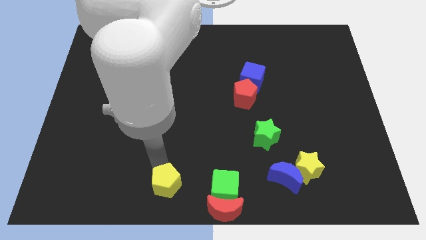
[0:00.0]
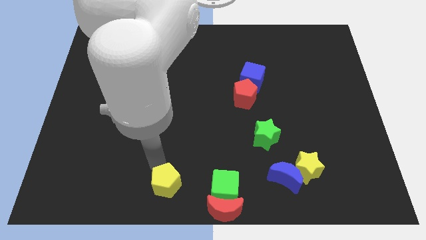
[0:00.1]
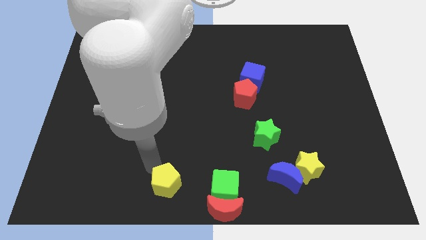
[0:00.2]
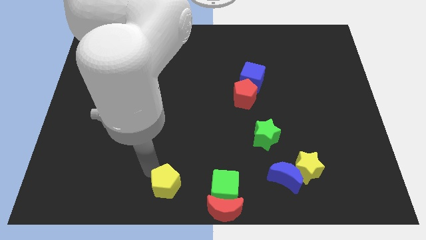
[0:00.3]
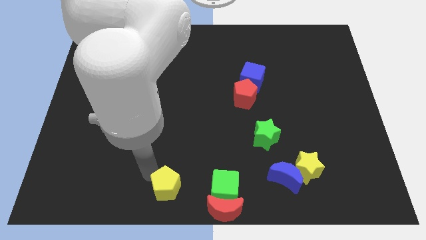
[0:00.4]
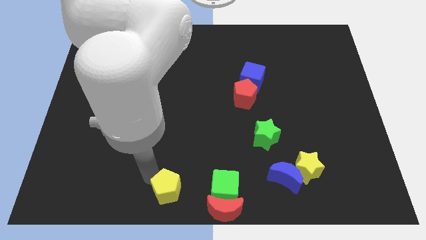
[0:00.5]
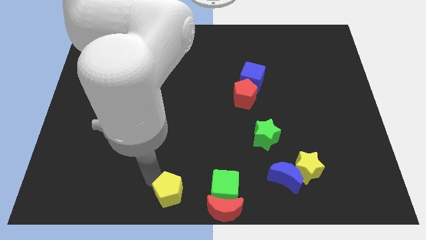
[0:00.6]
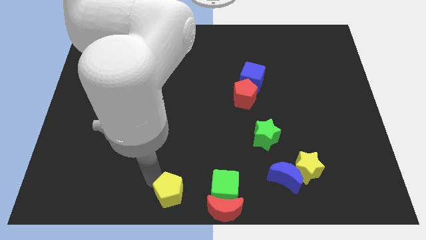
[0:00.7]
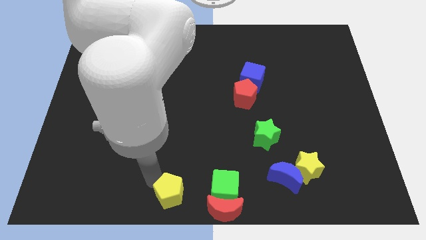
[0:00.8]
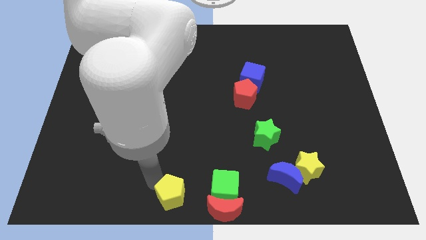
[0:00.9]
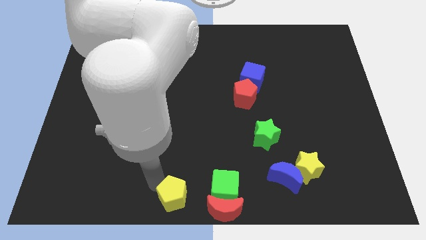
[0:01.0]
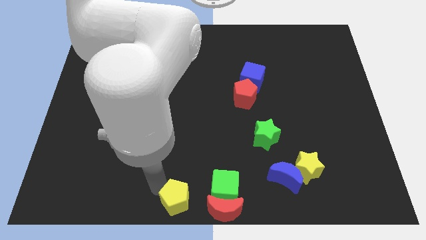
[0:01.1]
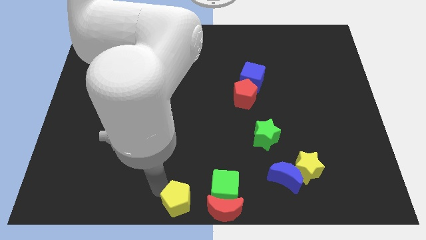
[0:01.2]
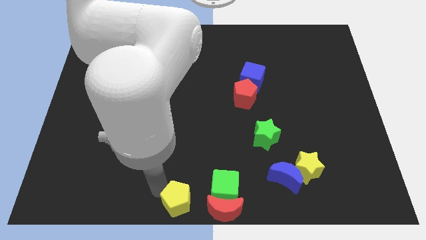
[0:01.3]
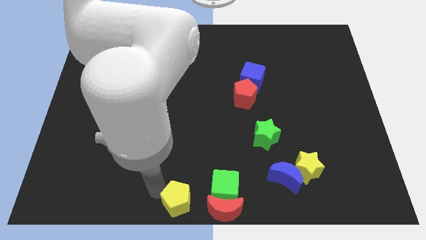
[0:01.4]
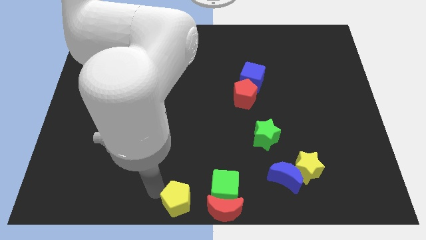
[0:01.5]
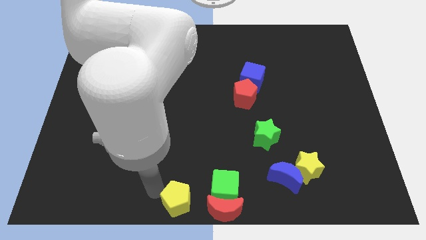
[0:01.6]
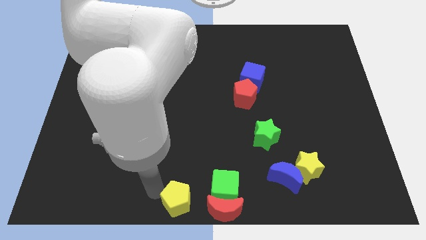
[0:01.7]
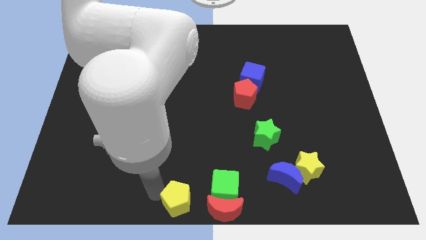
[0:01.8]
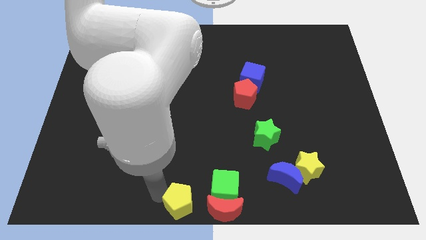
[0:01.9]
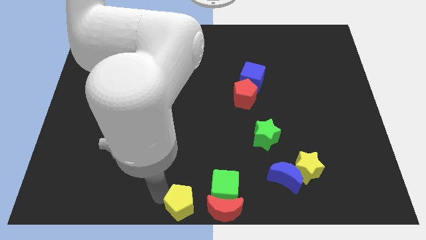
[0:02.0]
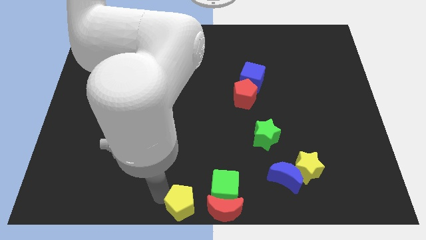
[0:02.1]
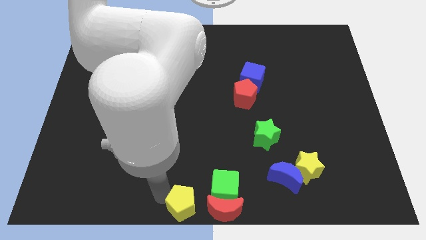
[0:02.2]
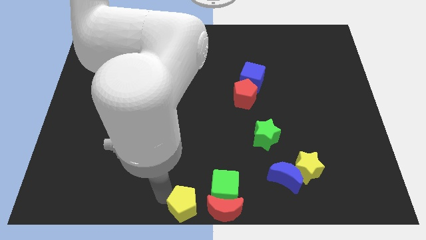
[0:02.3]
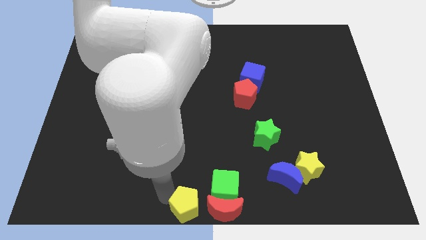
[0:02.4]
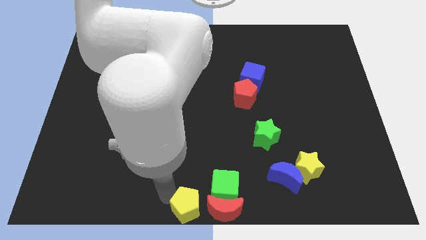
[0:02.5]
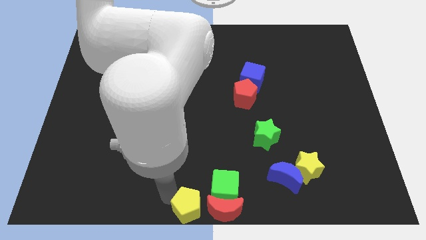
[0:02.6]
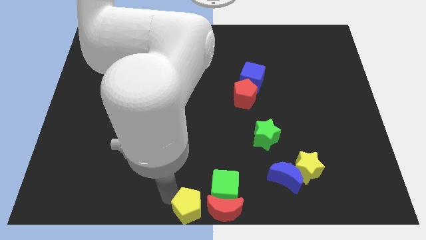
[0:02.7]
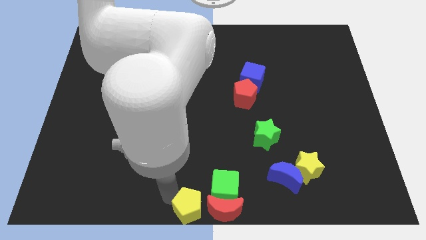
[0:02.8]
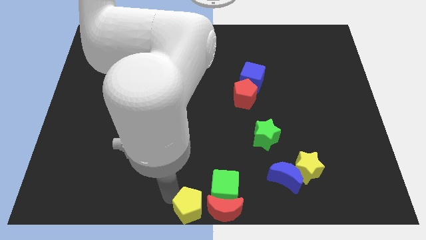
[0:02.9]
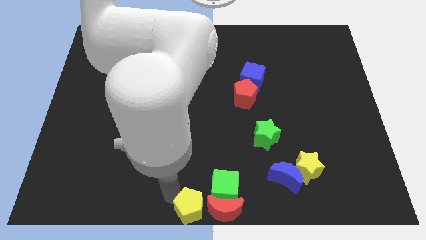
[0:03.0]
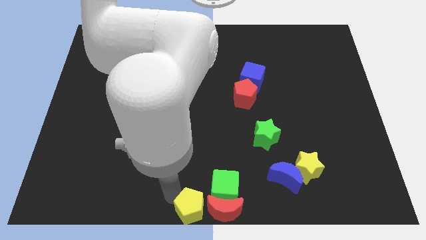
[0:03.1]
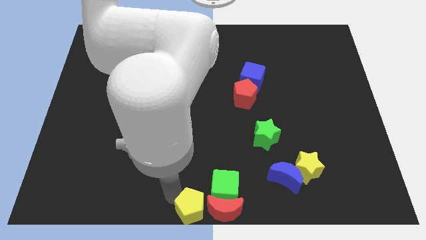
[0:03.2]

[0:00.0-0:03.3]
place the yellow pentagon to the left of the red crescent

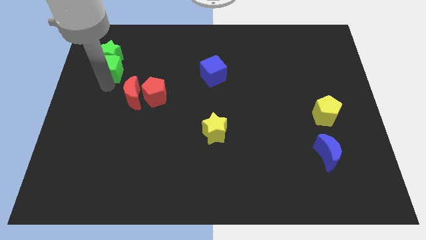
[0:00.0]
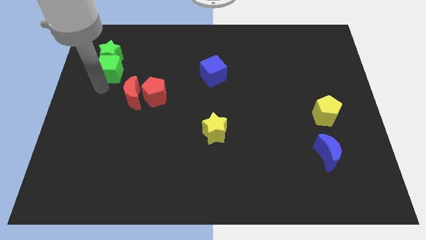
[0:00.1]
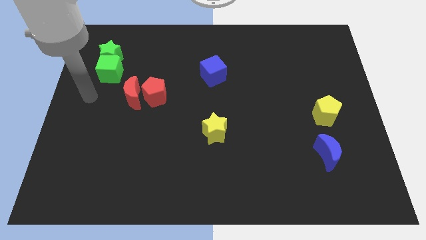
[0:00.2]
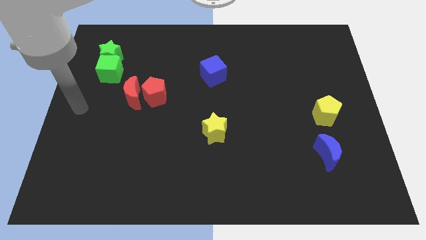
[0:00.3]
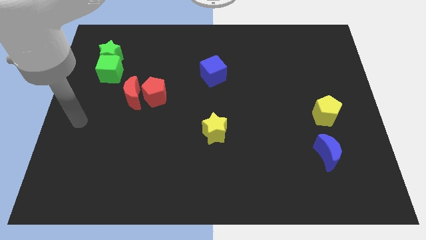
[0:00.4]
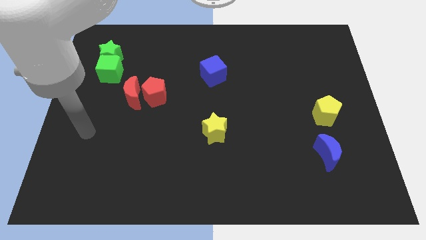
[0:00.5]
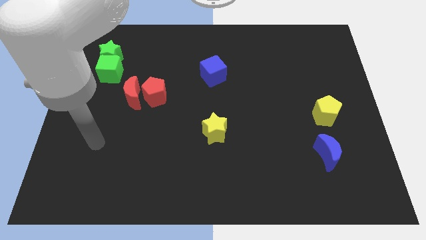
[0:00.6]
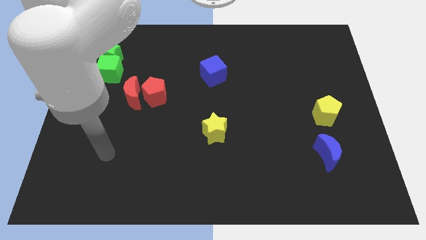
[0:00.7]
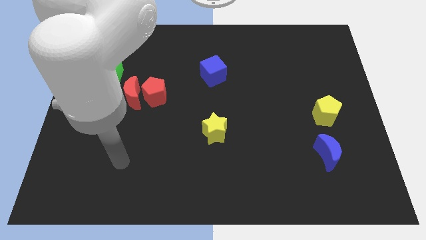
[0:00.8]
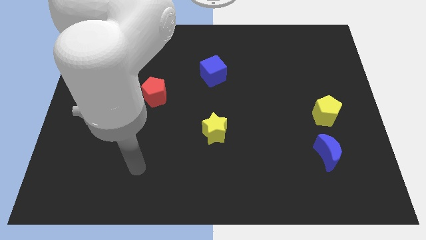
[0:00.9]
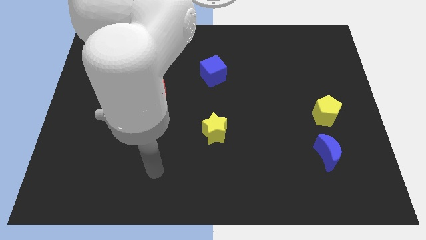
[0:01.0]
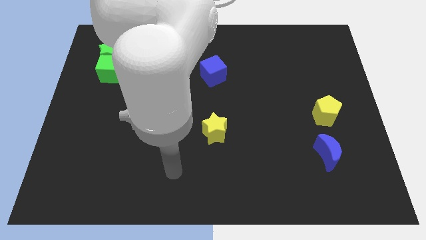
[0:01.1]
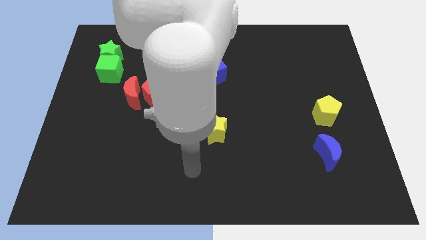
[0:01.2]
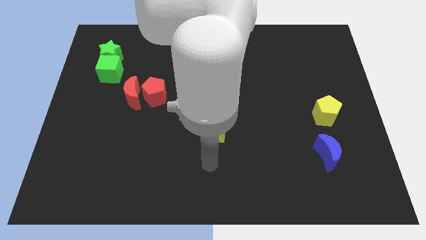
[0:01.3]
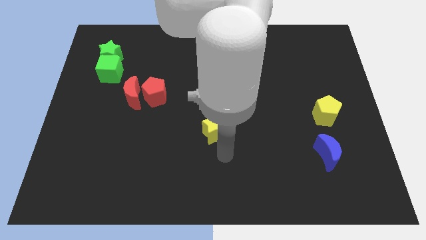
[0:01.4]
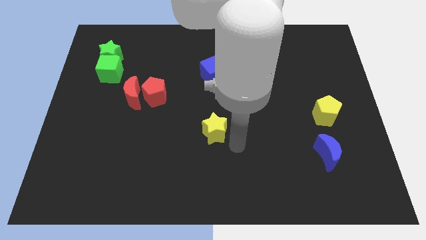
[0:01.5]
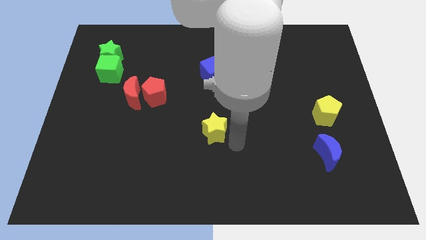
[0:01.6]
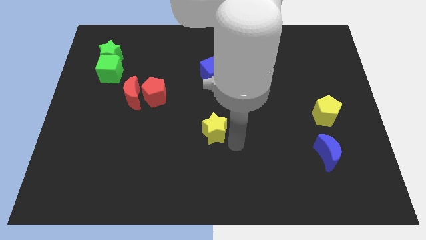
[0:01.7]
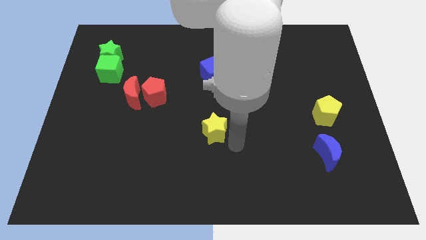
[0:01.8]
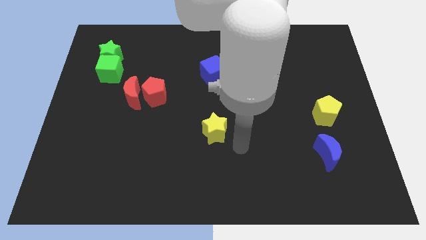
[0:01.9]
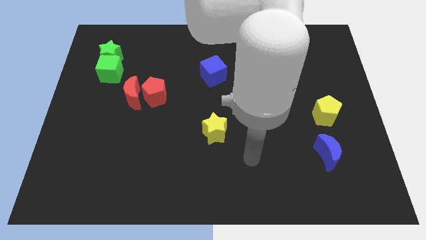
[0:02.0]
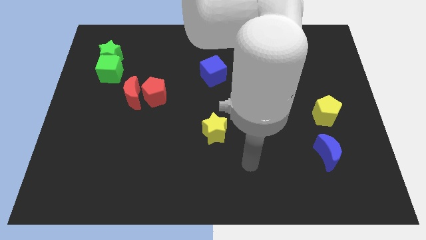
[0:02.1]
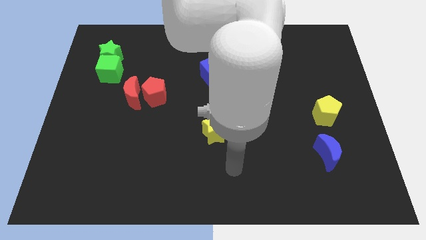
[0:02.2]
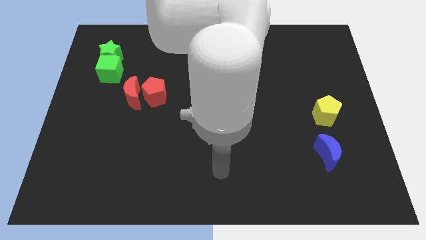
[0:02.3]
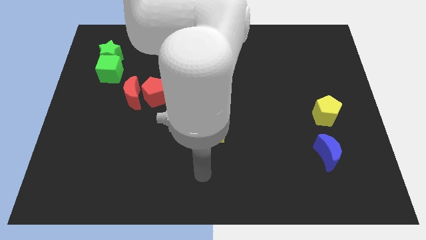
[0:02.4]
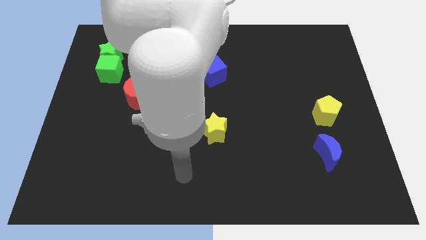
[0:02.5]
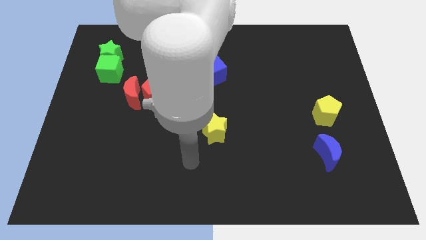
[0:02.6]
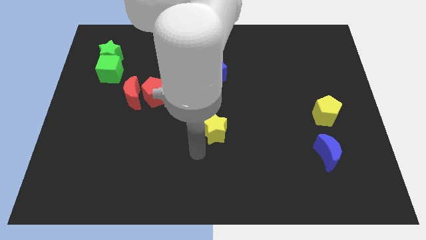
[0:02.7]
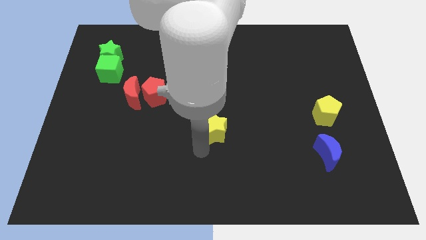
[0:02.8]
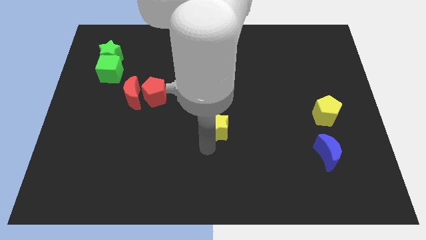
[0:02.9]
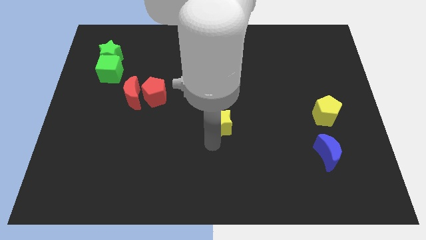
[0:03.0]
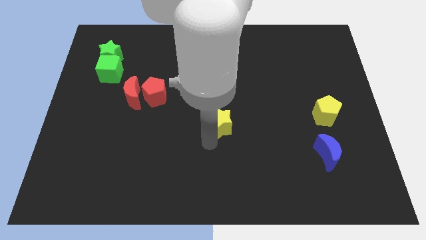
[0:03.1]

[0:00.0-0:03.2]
move your arm towards the yellow star

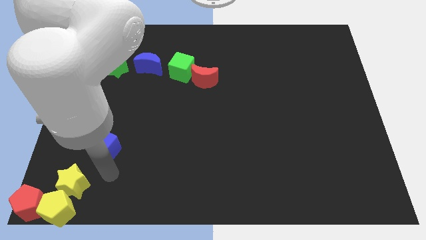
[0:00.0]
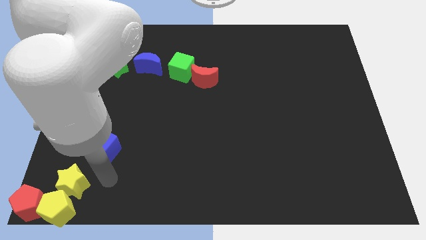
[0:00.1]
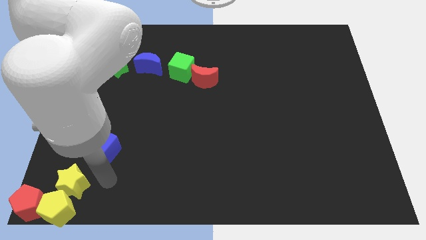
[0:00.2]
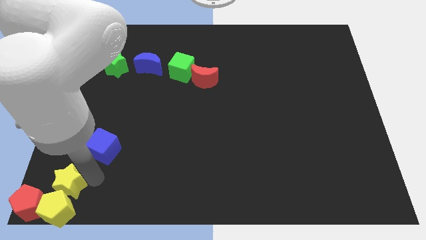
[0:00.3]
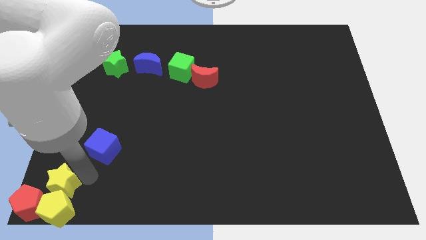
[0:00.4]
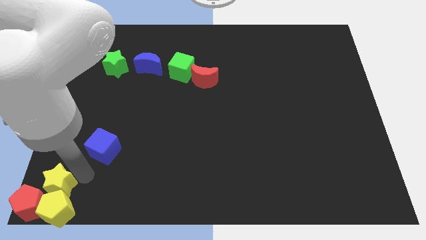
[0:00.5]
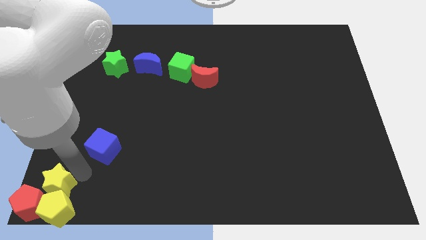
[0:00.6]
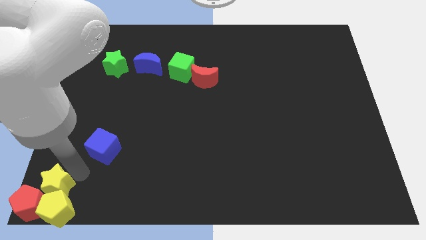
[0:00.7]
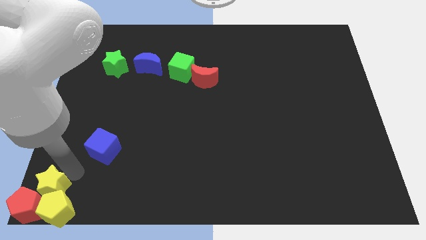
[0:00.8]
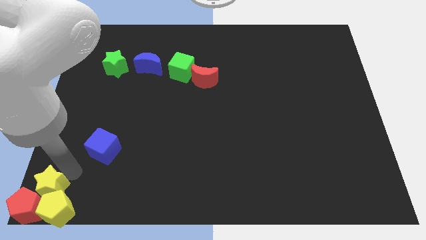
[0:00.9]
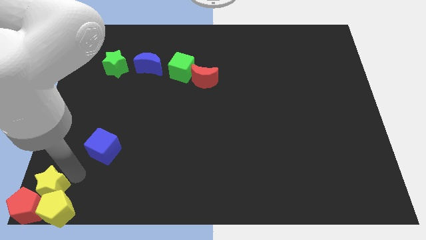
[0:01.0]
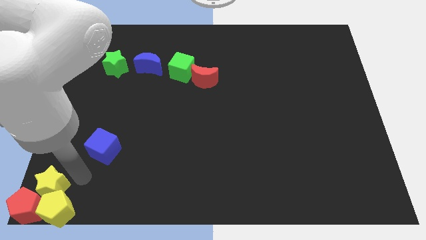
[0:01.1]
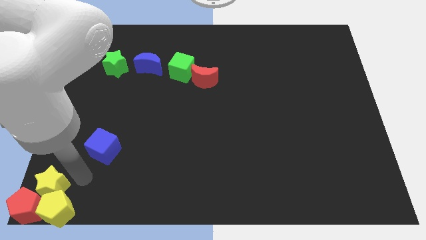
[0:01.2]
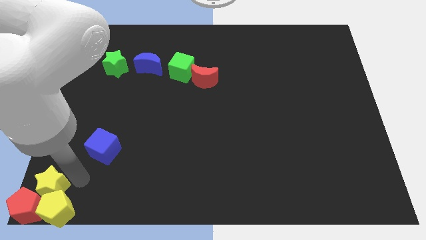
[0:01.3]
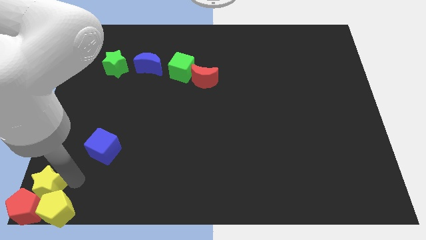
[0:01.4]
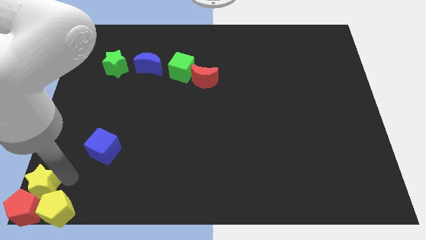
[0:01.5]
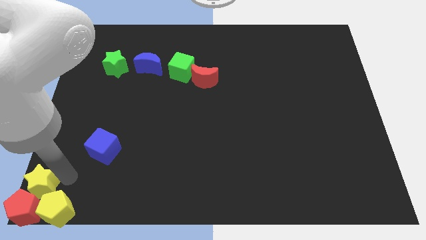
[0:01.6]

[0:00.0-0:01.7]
move the yellow star to the bottom left corner

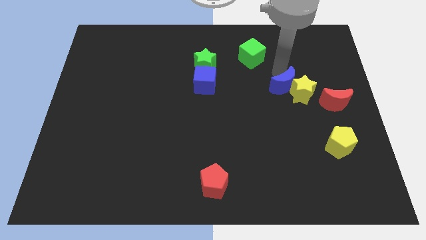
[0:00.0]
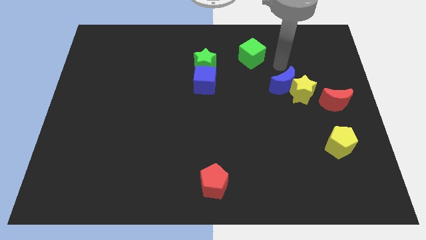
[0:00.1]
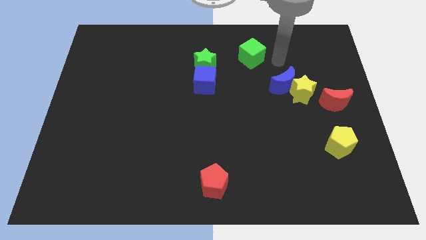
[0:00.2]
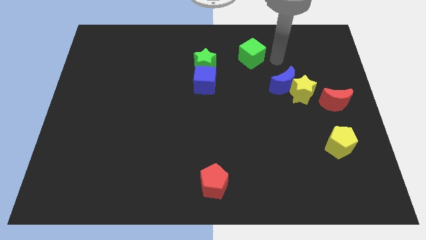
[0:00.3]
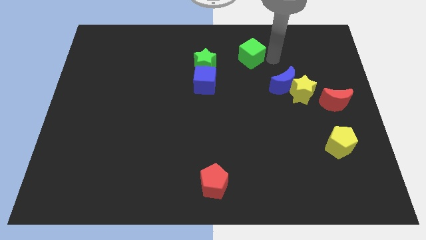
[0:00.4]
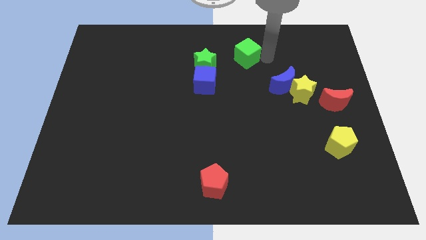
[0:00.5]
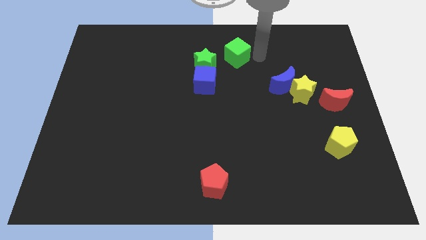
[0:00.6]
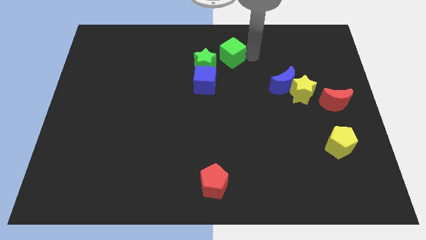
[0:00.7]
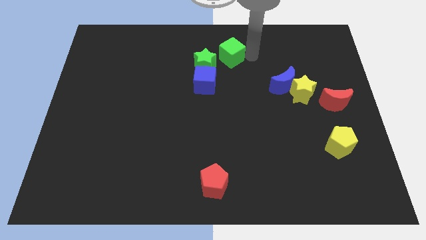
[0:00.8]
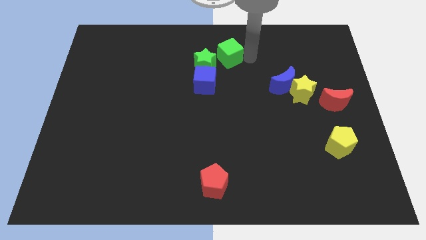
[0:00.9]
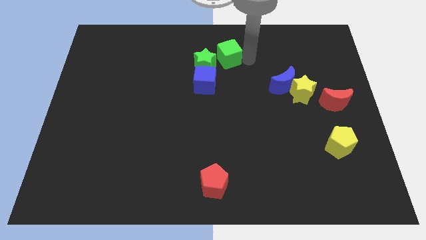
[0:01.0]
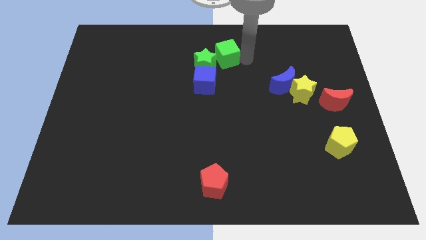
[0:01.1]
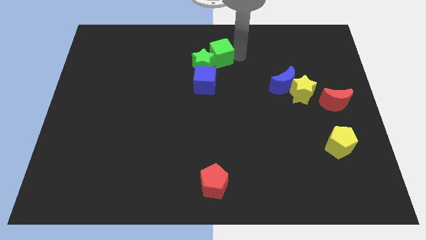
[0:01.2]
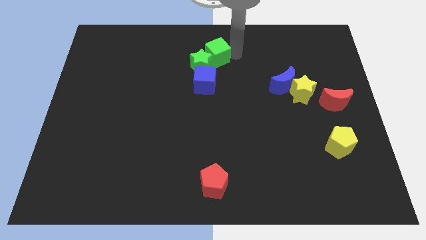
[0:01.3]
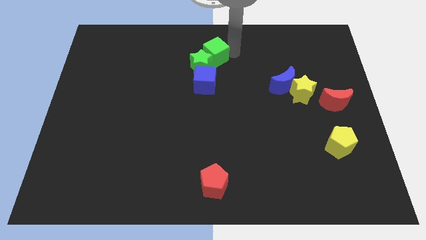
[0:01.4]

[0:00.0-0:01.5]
move the green cube into the green star
